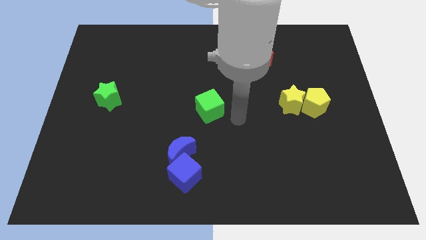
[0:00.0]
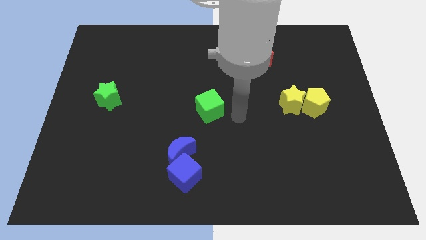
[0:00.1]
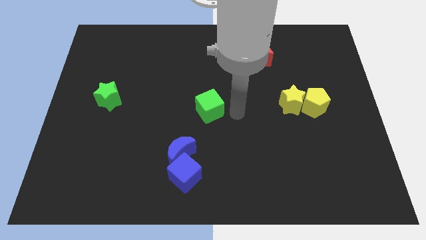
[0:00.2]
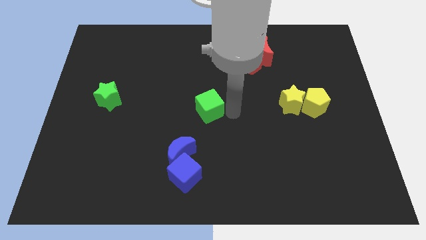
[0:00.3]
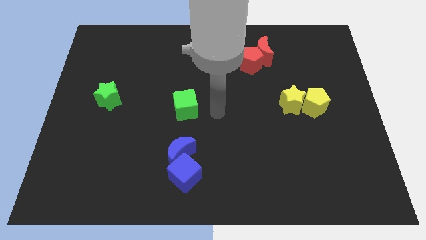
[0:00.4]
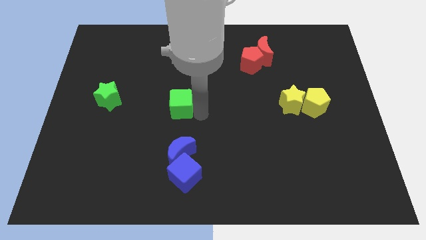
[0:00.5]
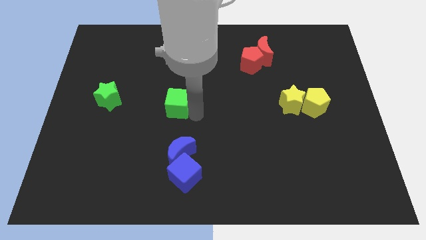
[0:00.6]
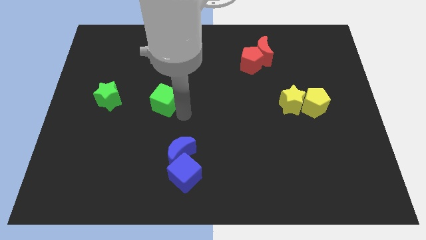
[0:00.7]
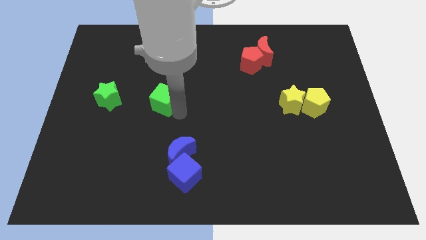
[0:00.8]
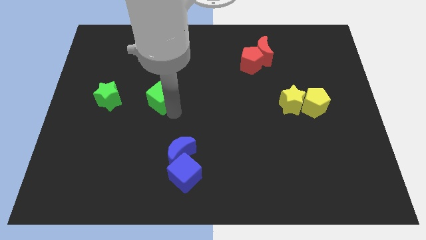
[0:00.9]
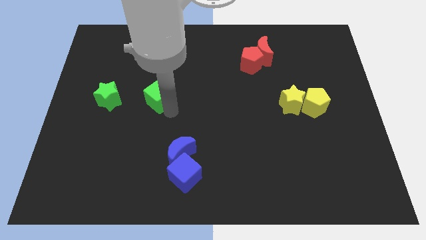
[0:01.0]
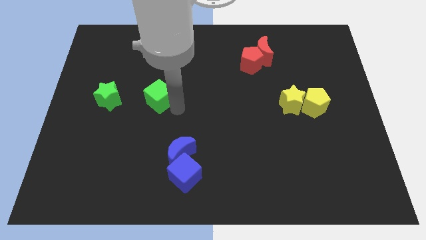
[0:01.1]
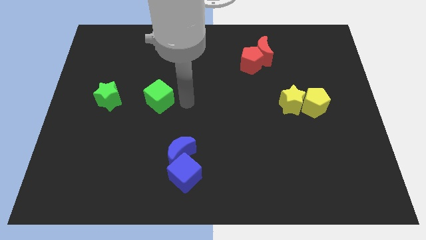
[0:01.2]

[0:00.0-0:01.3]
move the green cube parallel to the right of green star

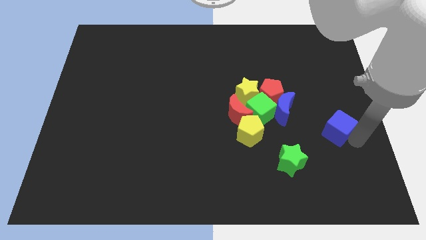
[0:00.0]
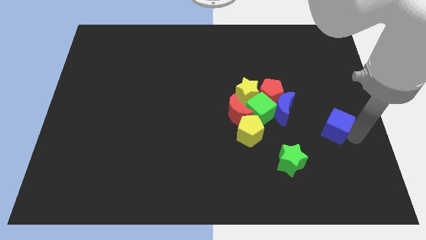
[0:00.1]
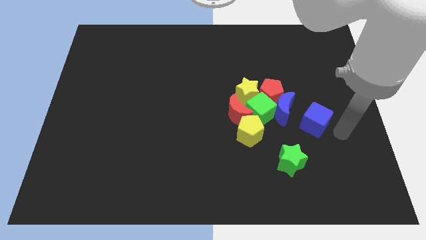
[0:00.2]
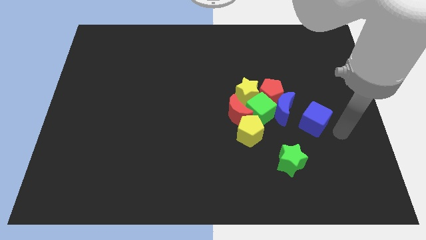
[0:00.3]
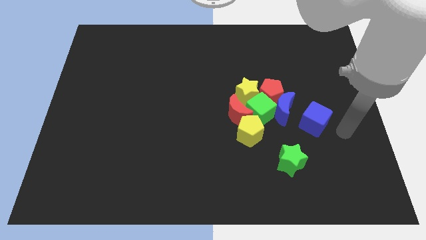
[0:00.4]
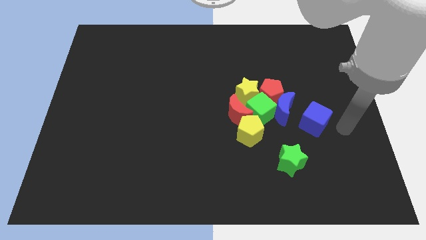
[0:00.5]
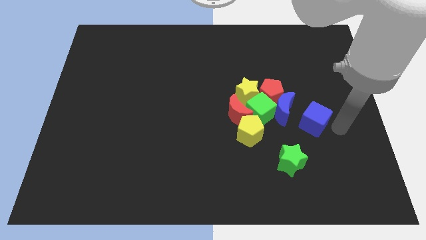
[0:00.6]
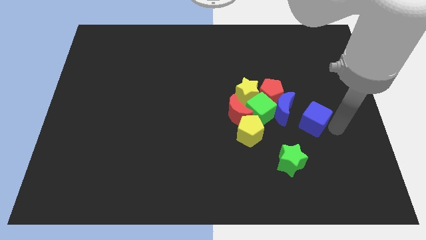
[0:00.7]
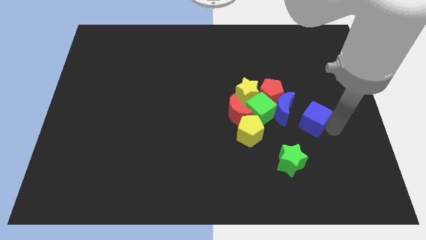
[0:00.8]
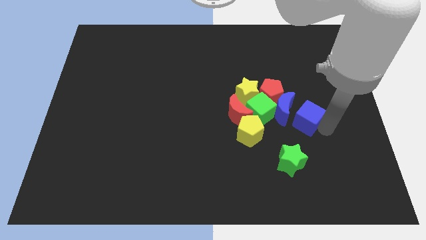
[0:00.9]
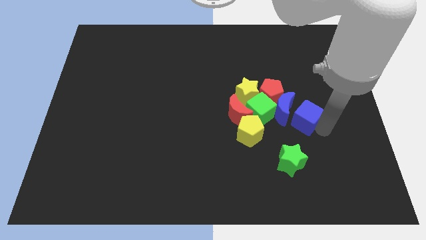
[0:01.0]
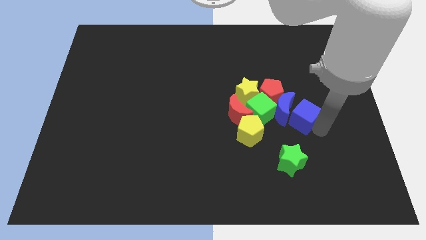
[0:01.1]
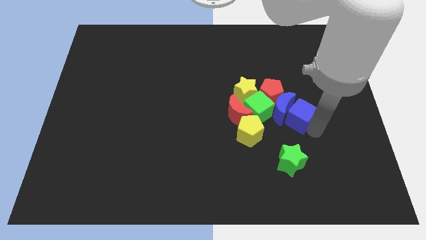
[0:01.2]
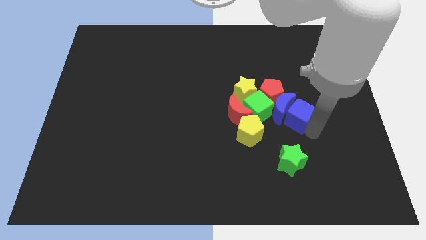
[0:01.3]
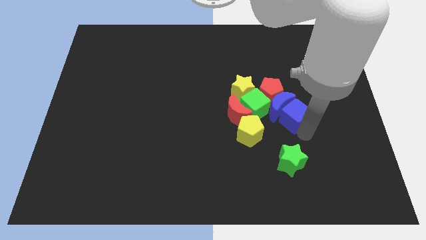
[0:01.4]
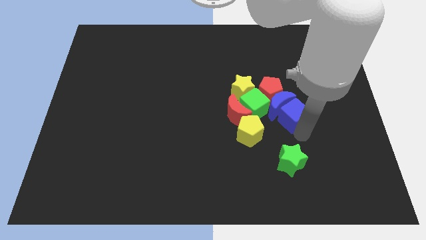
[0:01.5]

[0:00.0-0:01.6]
push blue cube into the blue moon

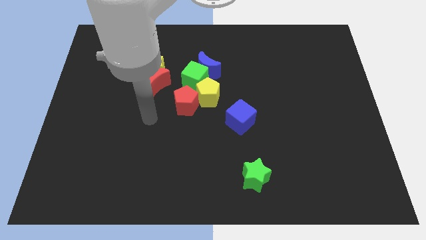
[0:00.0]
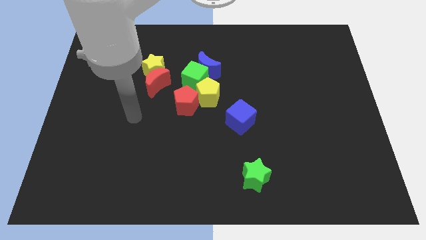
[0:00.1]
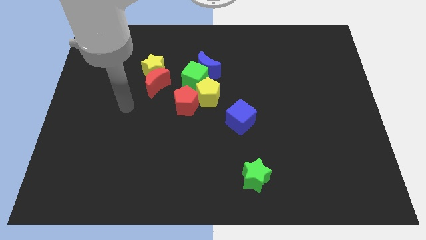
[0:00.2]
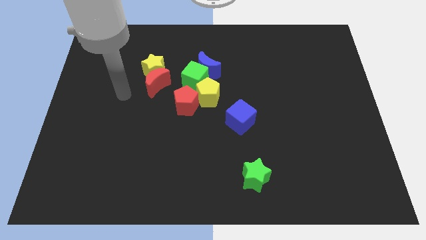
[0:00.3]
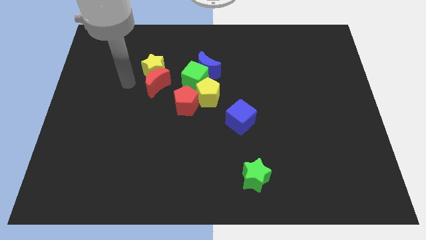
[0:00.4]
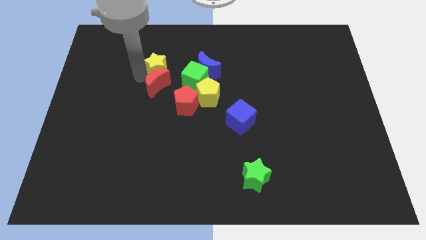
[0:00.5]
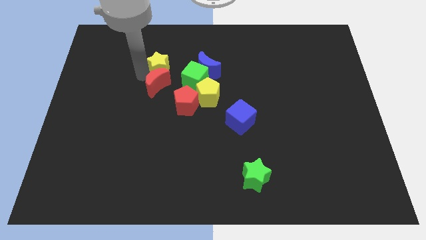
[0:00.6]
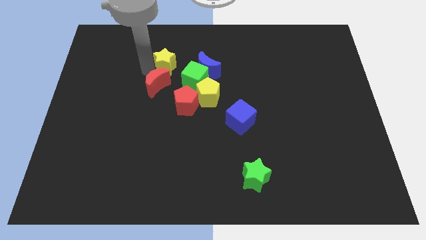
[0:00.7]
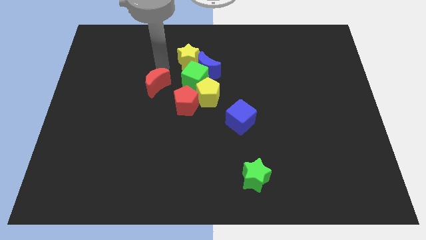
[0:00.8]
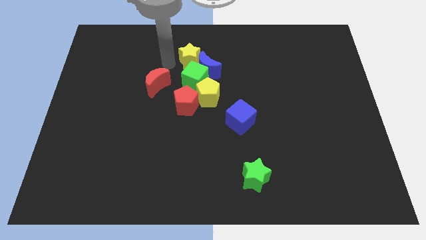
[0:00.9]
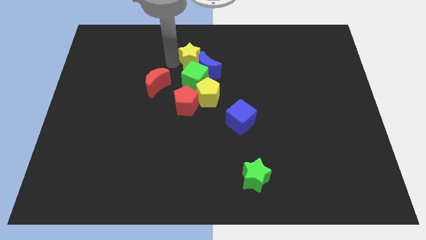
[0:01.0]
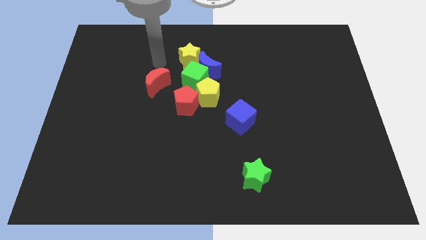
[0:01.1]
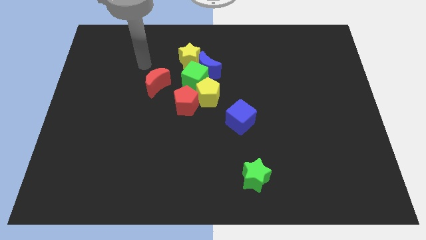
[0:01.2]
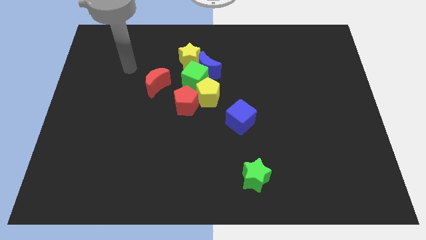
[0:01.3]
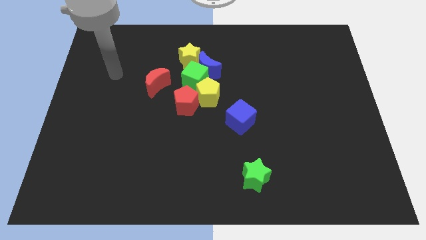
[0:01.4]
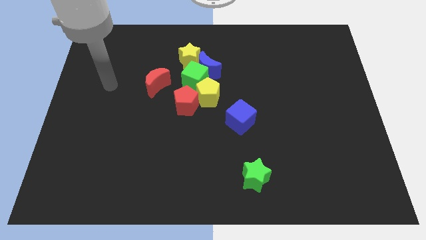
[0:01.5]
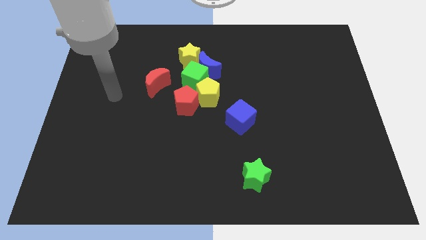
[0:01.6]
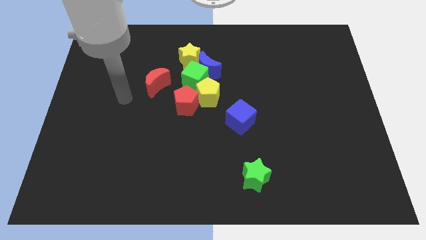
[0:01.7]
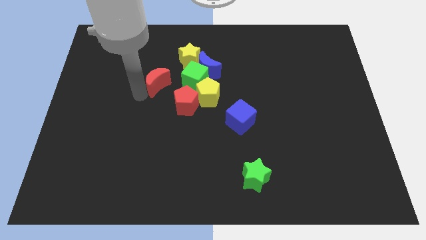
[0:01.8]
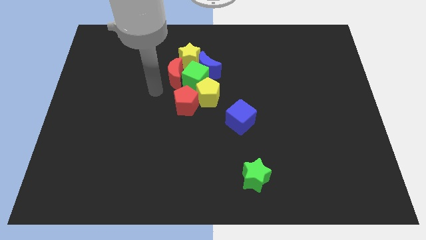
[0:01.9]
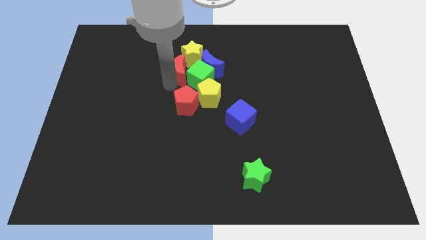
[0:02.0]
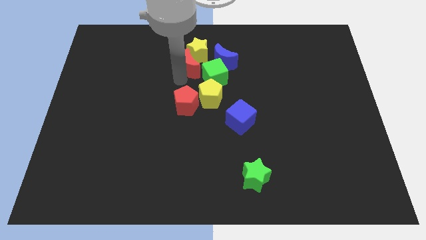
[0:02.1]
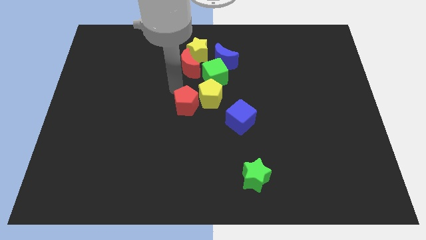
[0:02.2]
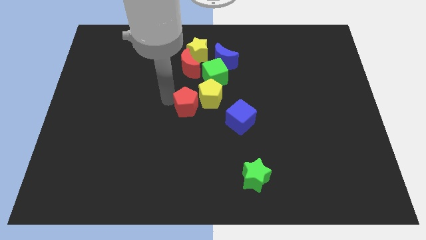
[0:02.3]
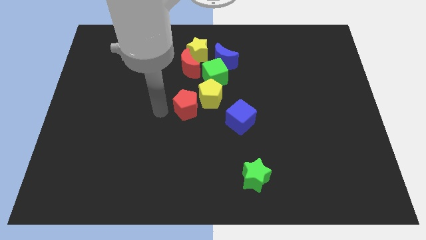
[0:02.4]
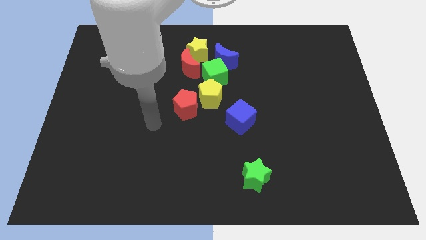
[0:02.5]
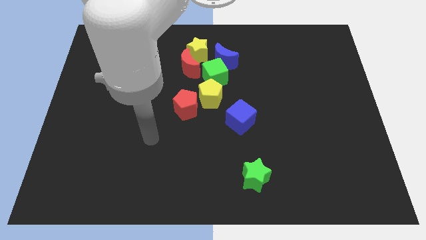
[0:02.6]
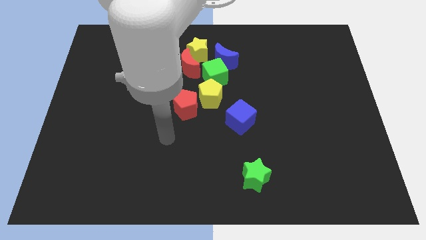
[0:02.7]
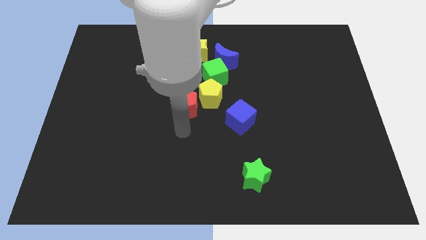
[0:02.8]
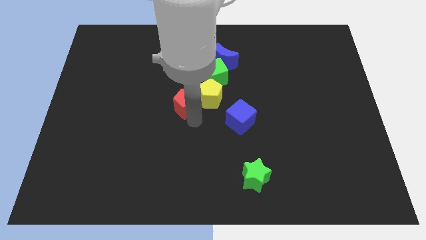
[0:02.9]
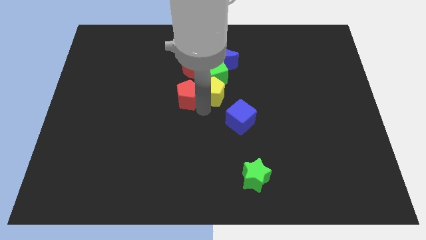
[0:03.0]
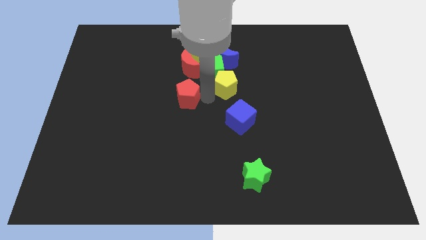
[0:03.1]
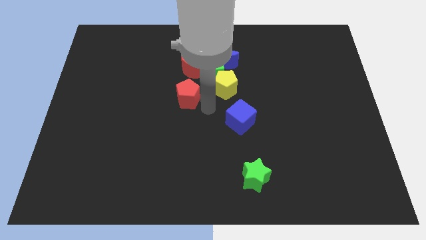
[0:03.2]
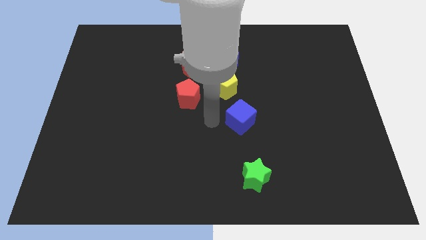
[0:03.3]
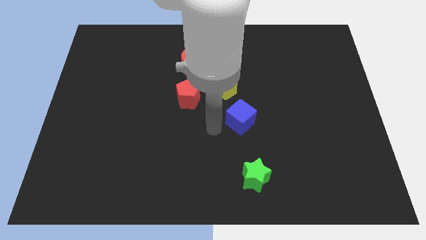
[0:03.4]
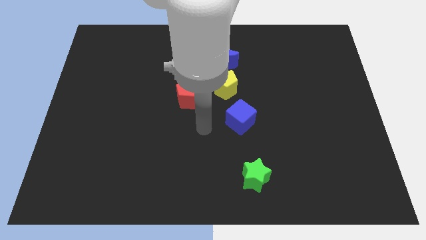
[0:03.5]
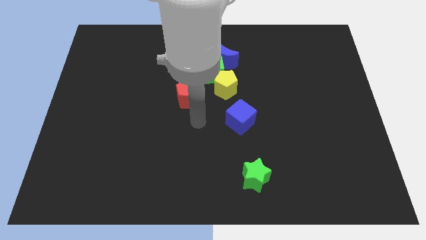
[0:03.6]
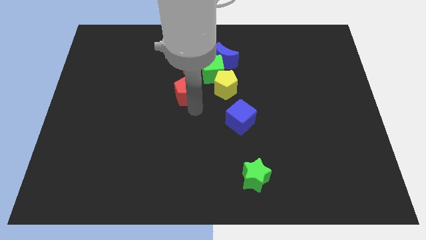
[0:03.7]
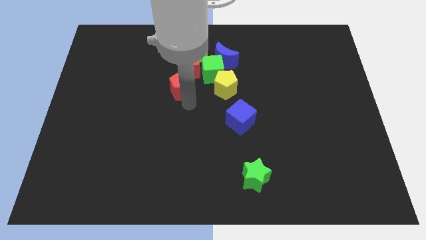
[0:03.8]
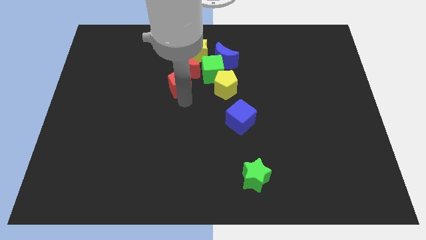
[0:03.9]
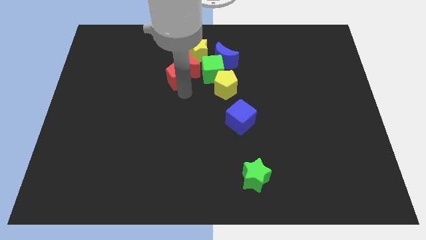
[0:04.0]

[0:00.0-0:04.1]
place the yellow star towards the top left side of the blue crescent

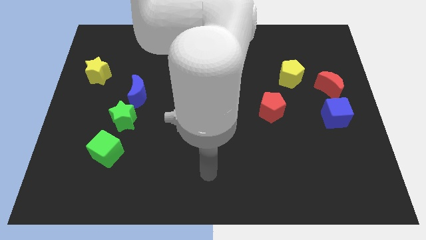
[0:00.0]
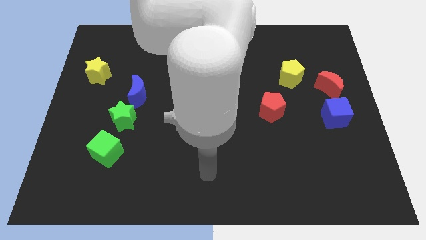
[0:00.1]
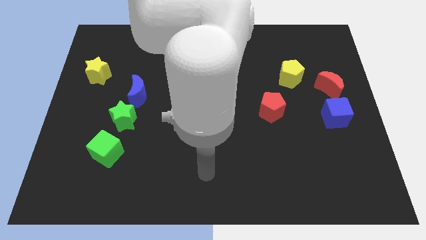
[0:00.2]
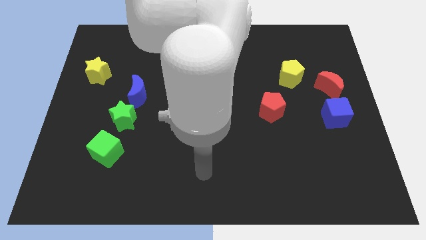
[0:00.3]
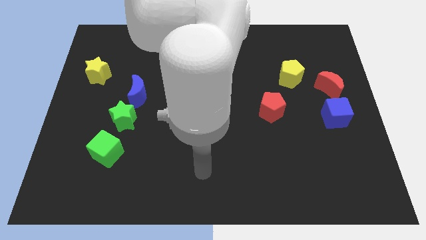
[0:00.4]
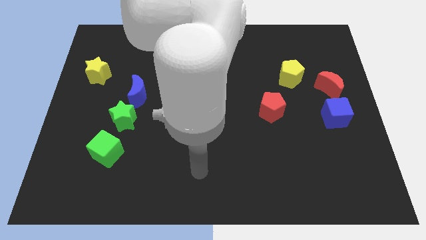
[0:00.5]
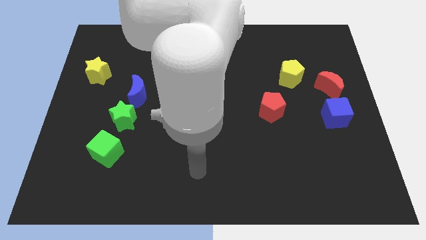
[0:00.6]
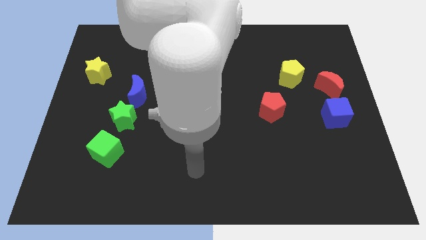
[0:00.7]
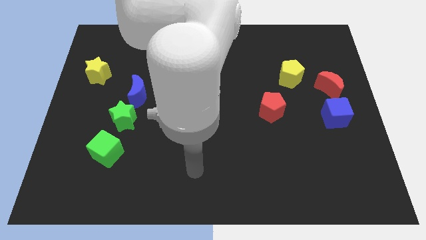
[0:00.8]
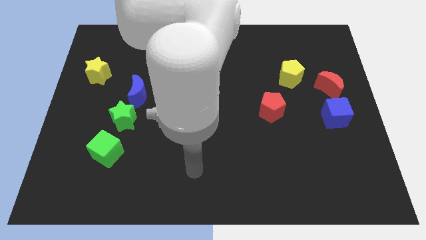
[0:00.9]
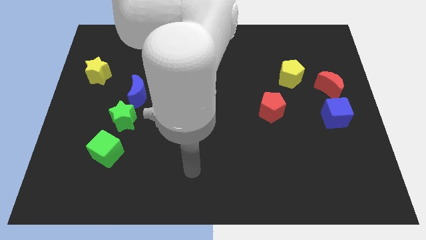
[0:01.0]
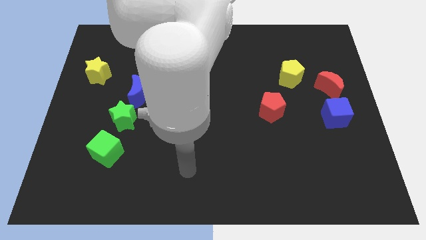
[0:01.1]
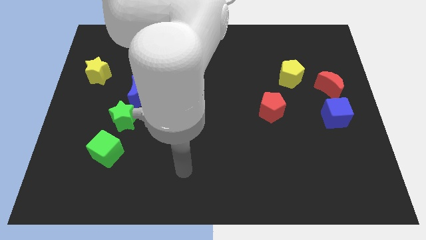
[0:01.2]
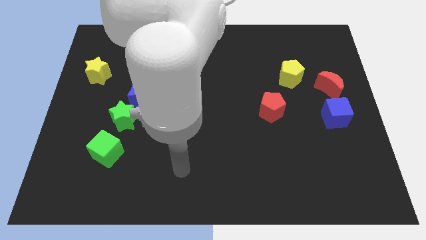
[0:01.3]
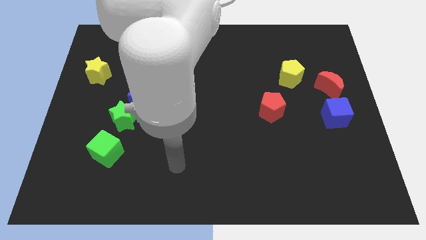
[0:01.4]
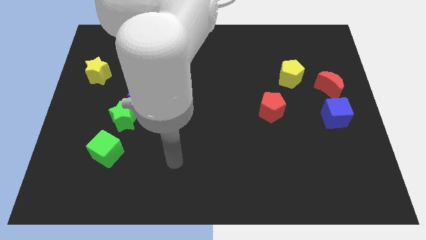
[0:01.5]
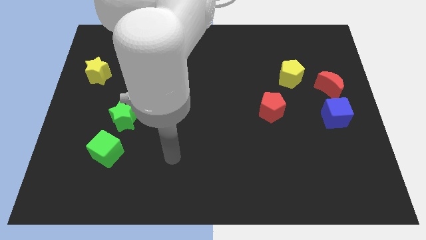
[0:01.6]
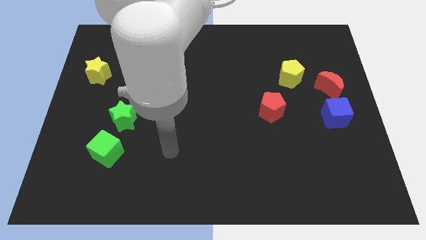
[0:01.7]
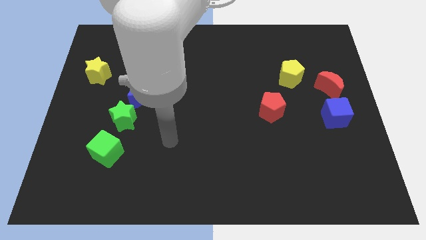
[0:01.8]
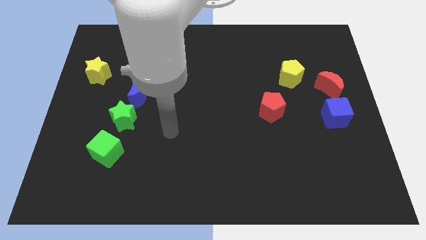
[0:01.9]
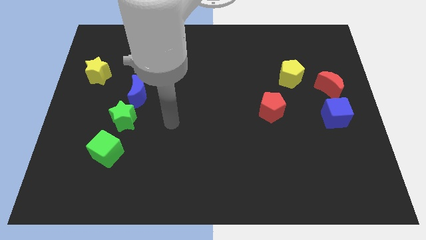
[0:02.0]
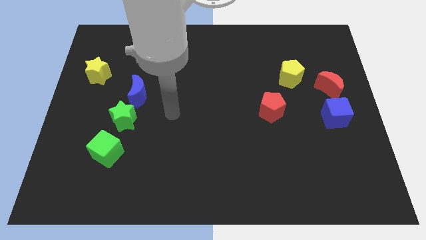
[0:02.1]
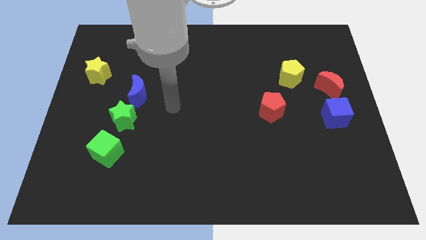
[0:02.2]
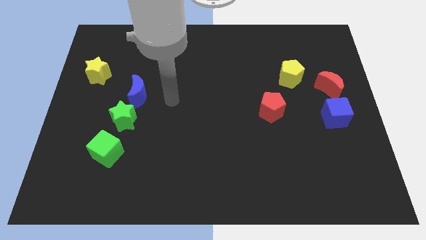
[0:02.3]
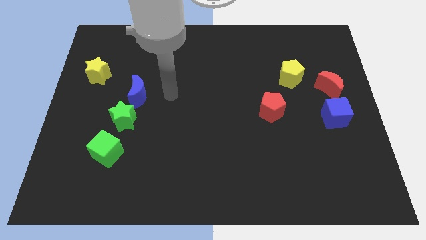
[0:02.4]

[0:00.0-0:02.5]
place the arm right to the blue moon
